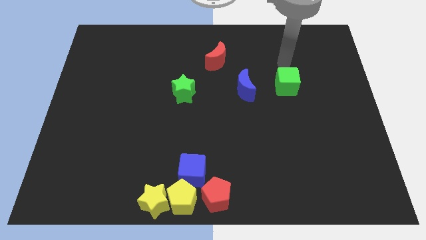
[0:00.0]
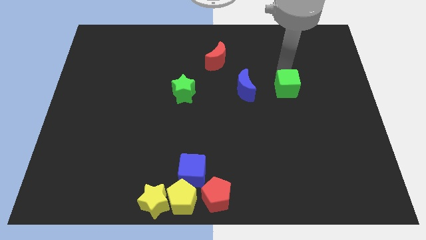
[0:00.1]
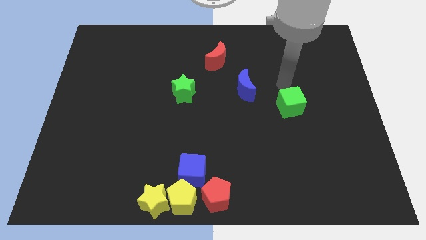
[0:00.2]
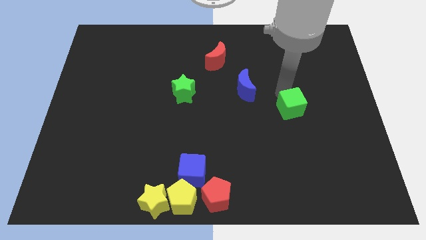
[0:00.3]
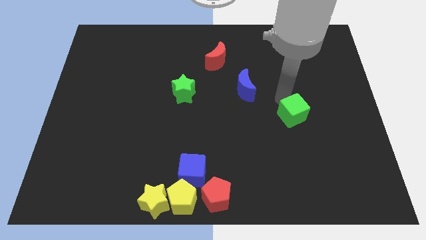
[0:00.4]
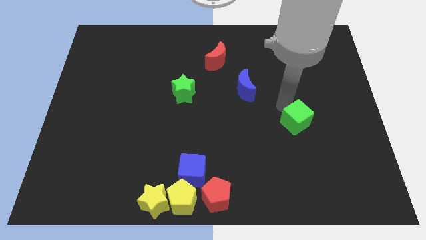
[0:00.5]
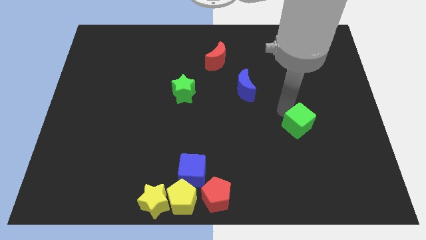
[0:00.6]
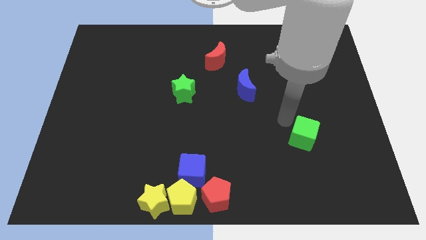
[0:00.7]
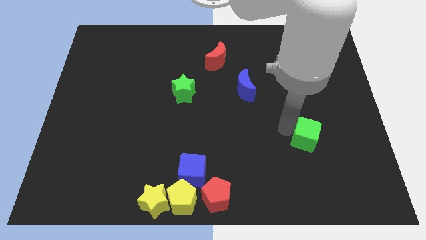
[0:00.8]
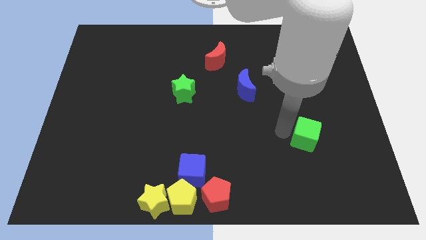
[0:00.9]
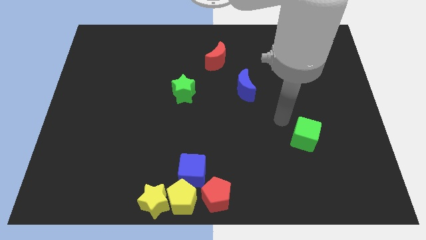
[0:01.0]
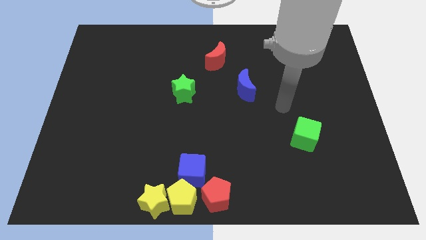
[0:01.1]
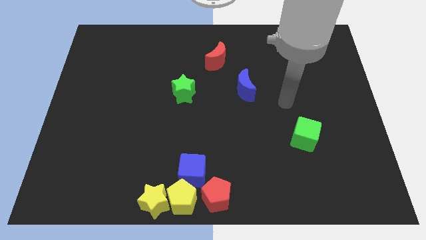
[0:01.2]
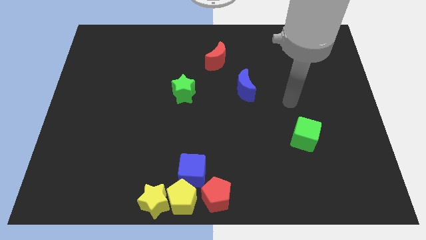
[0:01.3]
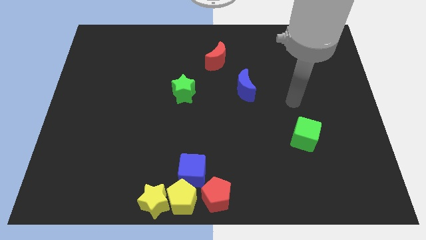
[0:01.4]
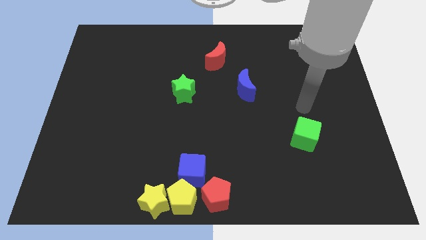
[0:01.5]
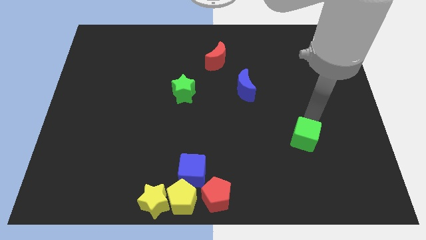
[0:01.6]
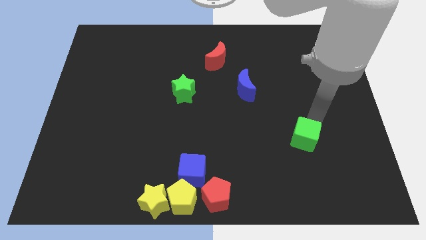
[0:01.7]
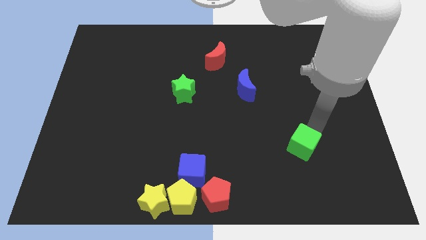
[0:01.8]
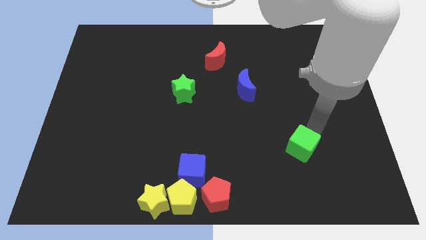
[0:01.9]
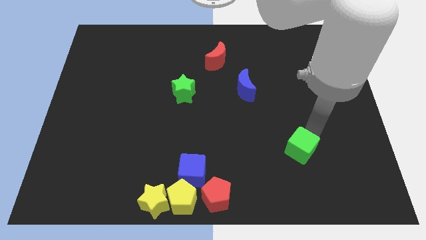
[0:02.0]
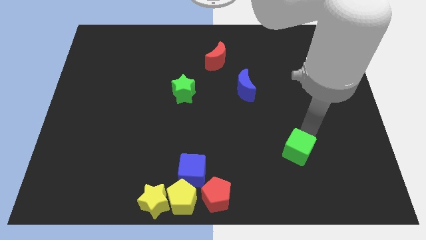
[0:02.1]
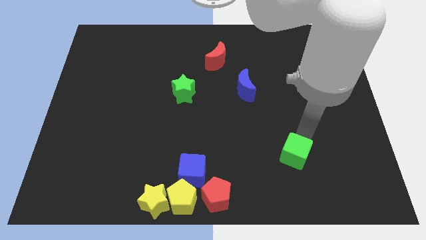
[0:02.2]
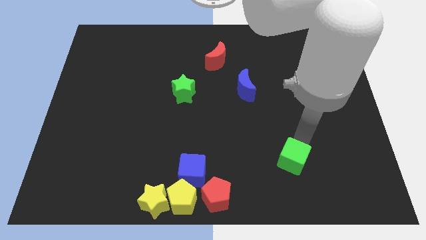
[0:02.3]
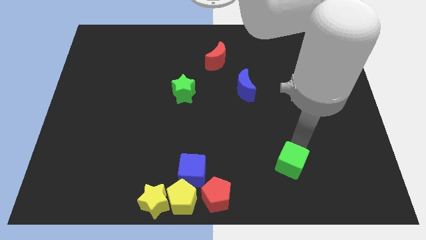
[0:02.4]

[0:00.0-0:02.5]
place the green cube to the right of the blue cube

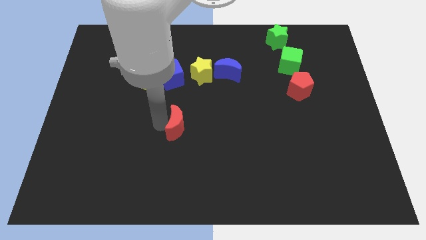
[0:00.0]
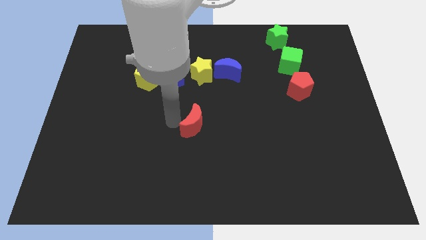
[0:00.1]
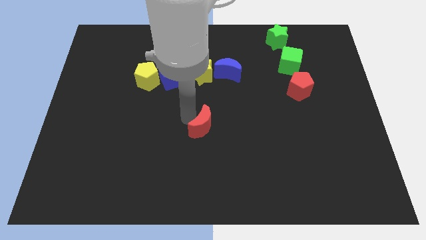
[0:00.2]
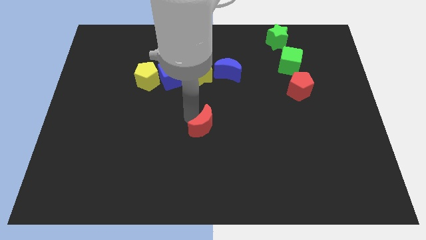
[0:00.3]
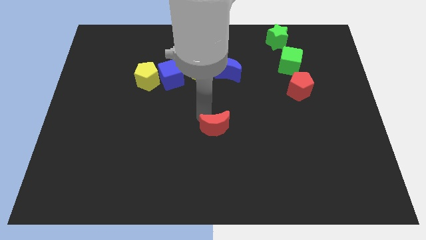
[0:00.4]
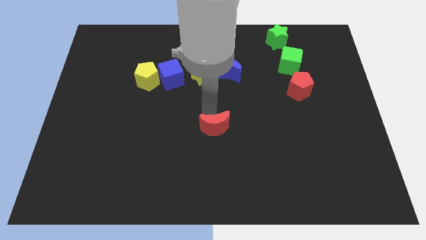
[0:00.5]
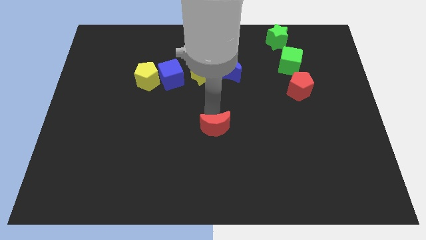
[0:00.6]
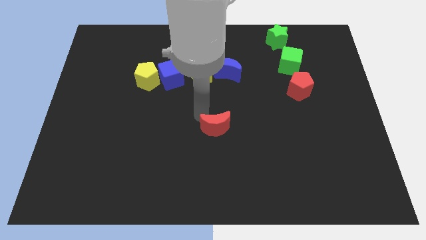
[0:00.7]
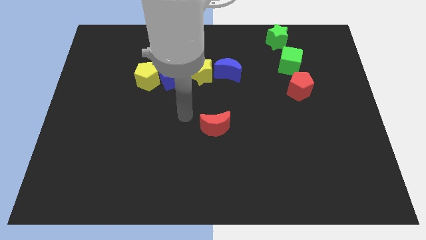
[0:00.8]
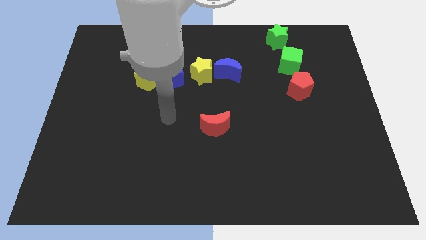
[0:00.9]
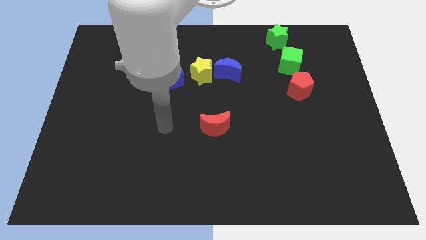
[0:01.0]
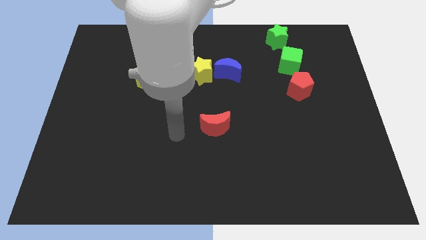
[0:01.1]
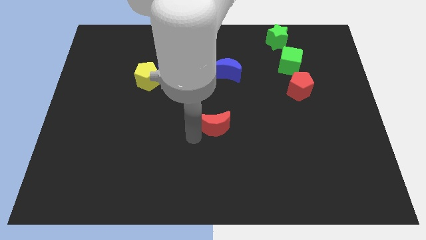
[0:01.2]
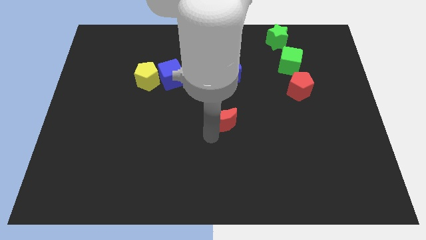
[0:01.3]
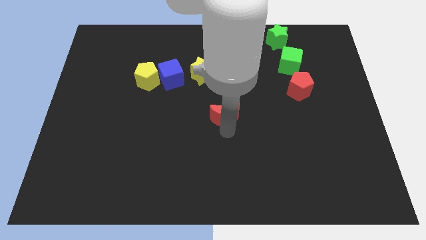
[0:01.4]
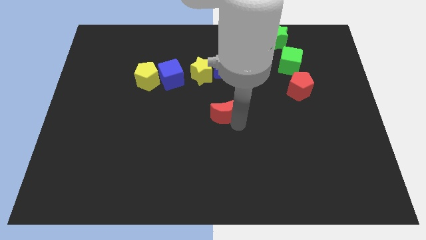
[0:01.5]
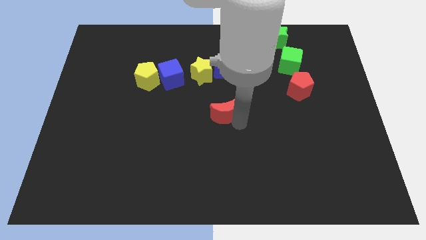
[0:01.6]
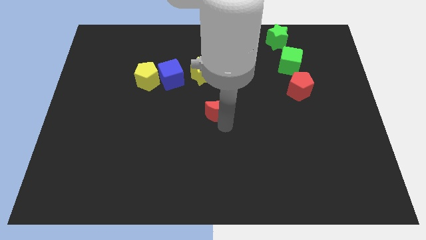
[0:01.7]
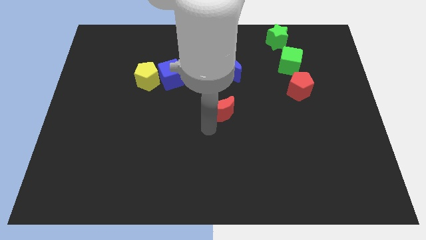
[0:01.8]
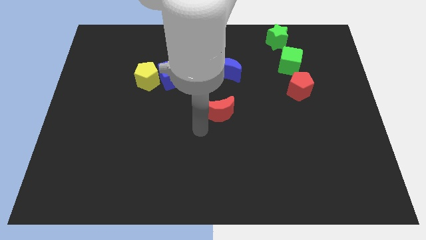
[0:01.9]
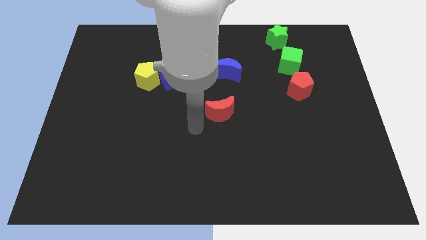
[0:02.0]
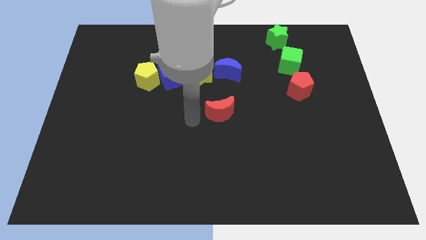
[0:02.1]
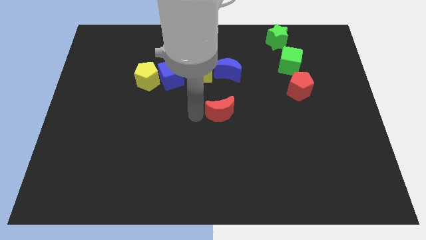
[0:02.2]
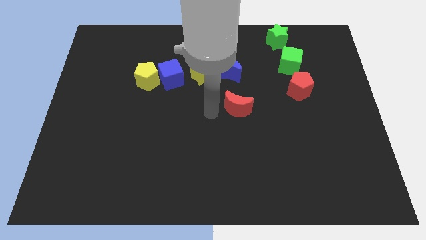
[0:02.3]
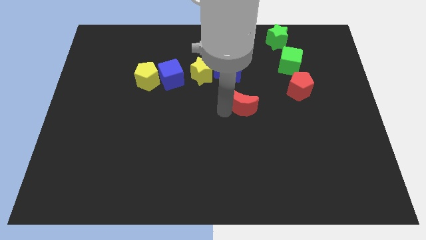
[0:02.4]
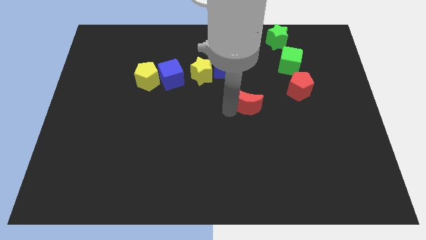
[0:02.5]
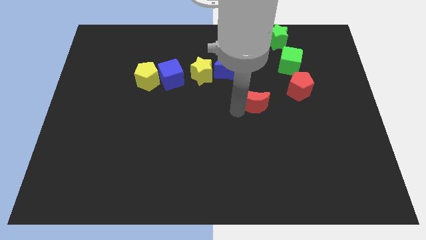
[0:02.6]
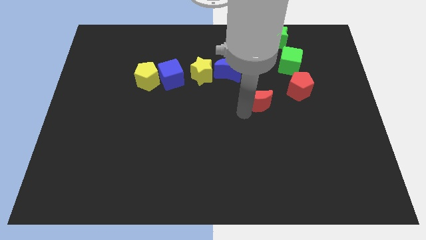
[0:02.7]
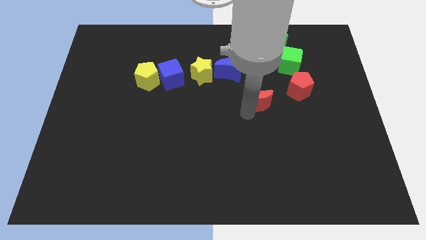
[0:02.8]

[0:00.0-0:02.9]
move the red crescent diagonal left to red pentagon

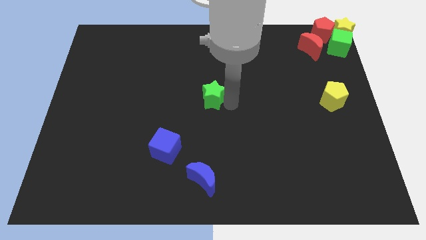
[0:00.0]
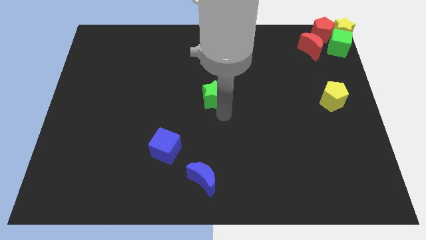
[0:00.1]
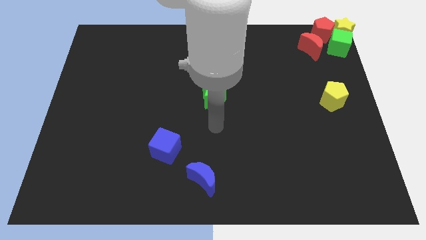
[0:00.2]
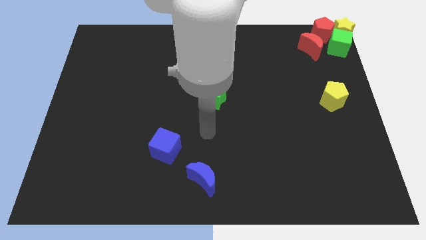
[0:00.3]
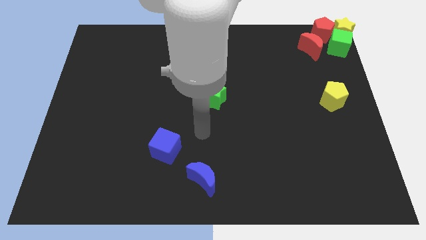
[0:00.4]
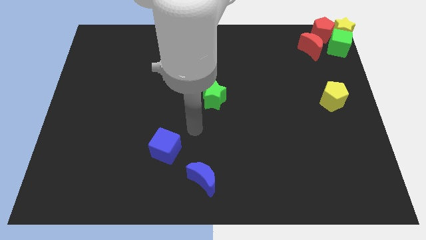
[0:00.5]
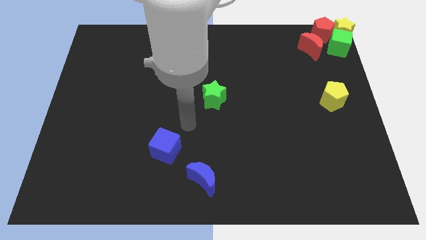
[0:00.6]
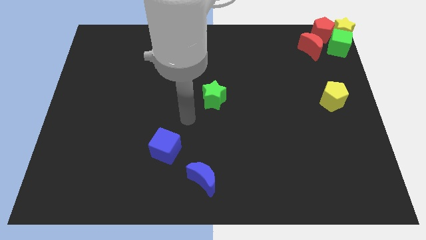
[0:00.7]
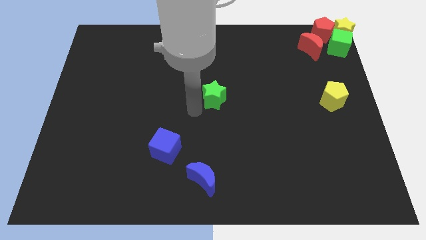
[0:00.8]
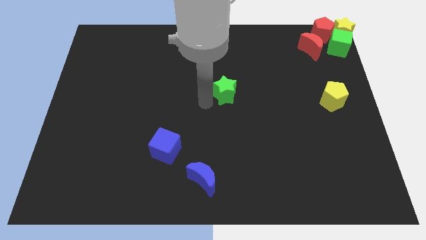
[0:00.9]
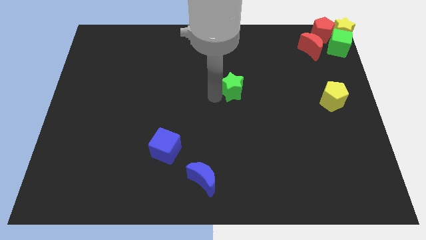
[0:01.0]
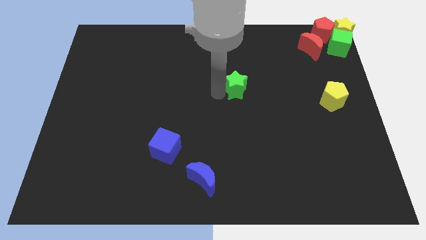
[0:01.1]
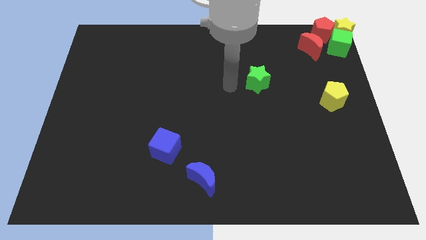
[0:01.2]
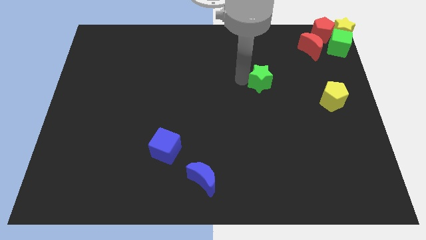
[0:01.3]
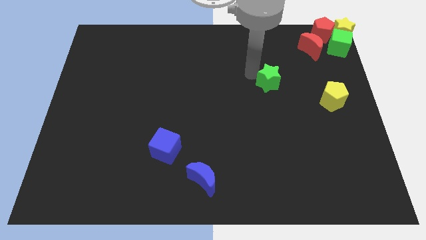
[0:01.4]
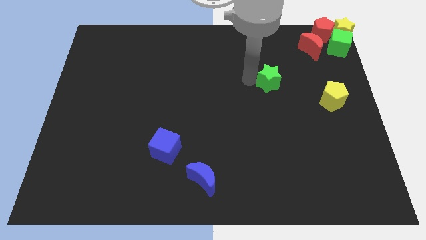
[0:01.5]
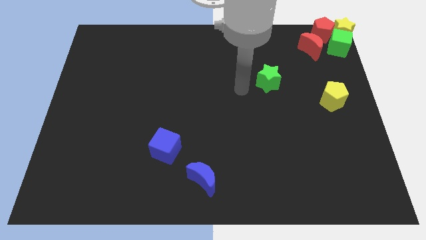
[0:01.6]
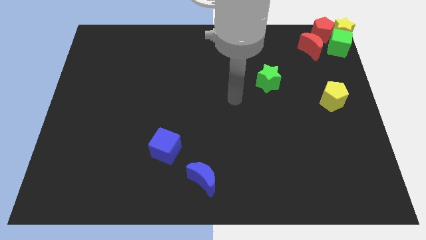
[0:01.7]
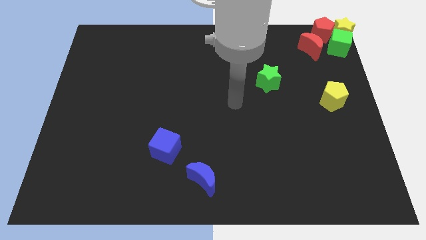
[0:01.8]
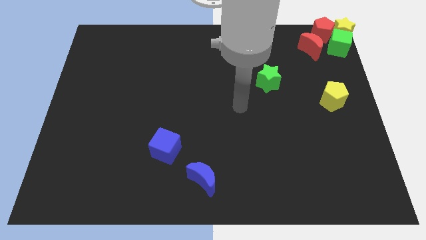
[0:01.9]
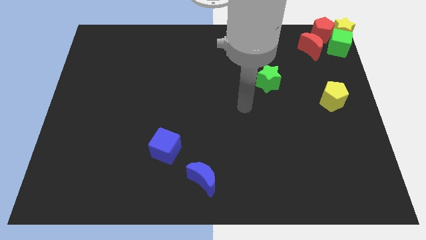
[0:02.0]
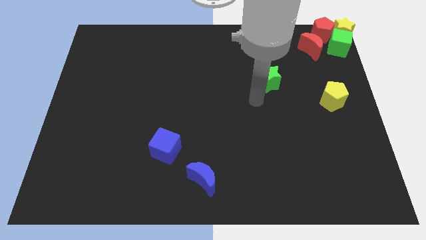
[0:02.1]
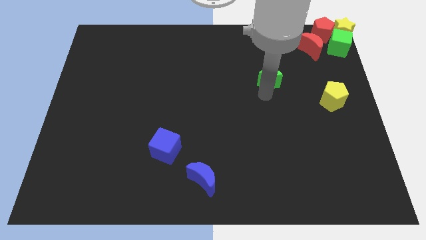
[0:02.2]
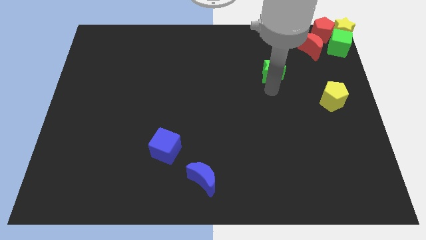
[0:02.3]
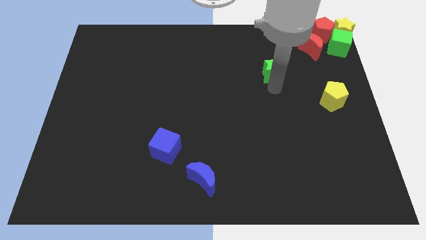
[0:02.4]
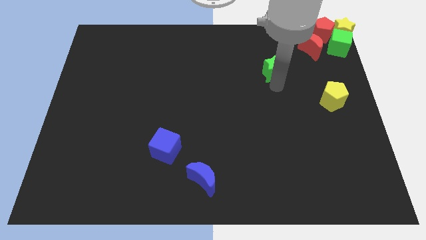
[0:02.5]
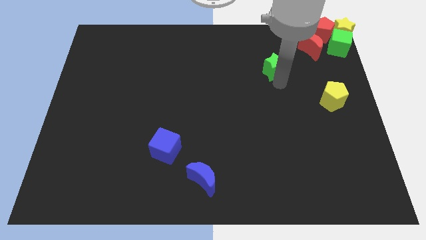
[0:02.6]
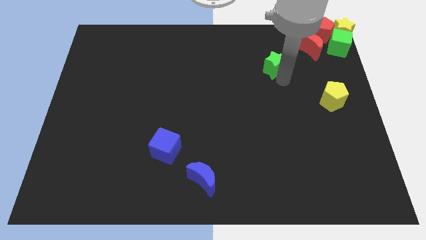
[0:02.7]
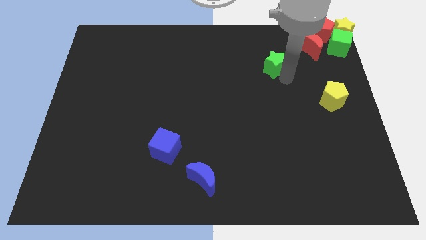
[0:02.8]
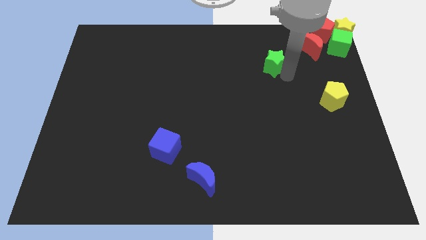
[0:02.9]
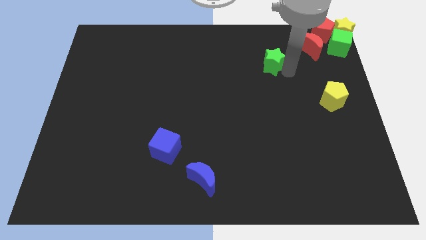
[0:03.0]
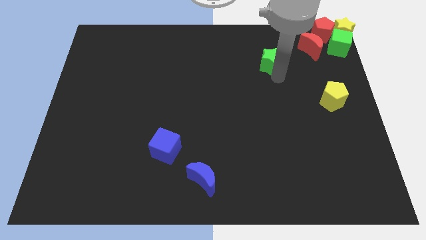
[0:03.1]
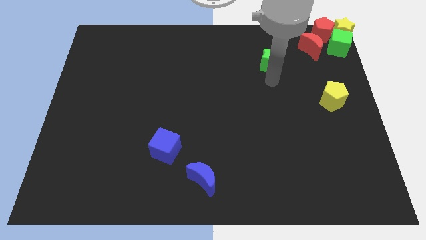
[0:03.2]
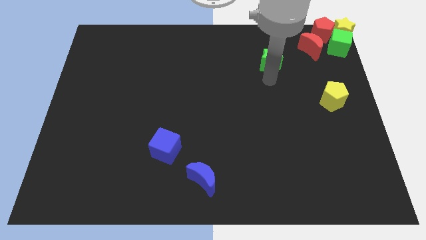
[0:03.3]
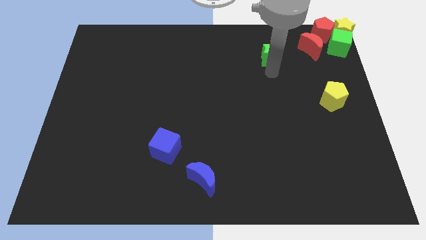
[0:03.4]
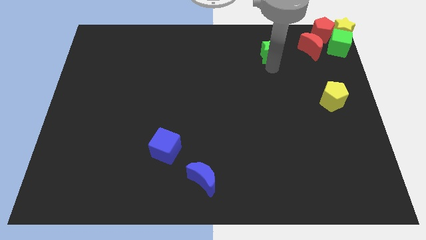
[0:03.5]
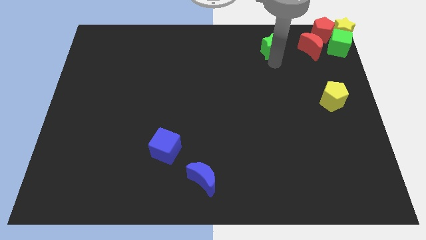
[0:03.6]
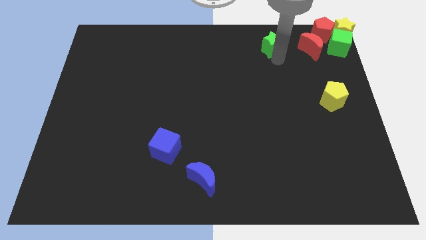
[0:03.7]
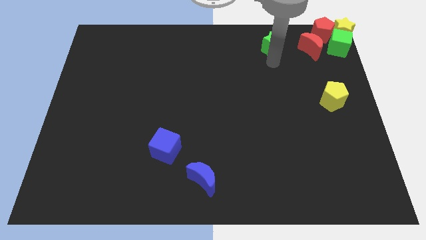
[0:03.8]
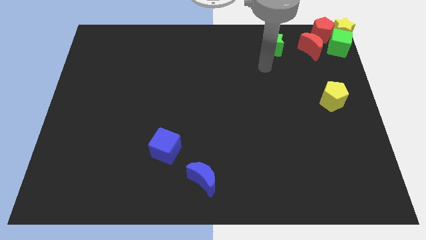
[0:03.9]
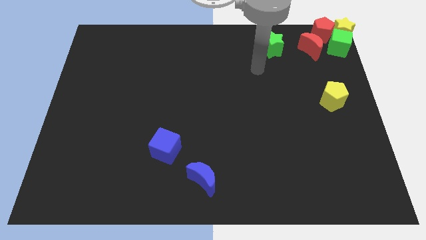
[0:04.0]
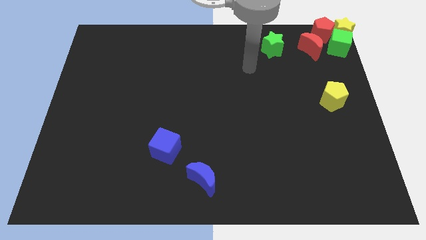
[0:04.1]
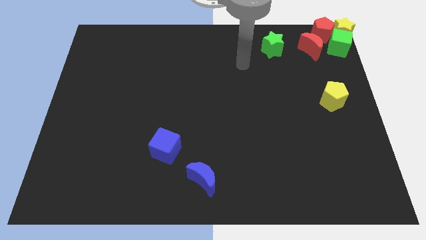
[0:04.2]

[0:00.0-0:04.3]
push the green star to the left side of the red crescent
